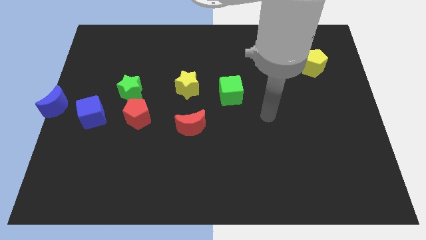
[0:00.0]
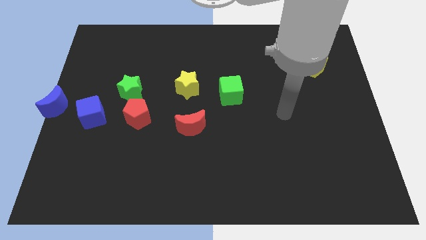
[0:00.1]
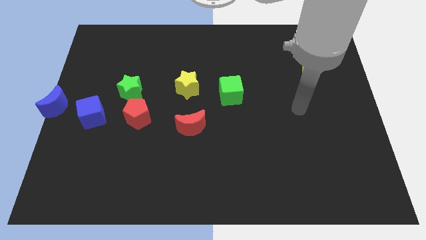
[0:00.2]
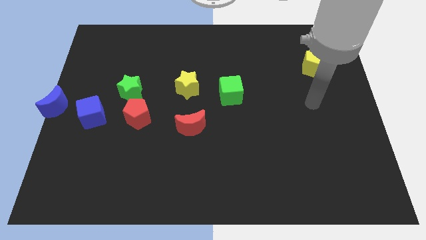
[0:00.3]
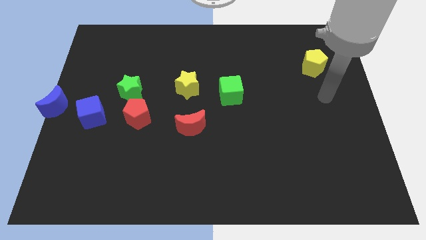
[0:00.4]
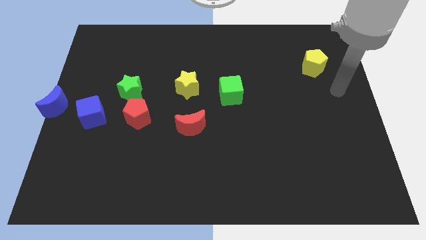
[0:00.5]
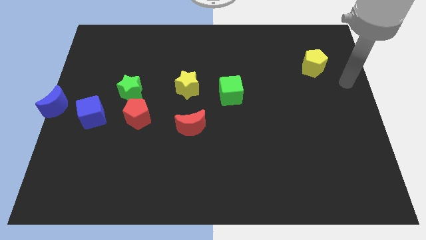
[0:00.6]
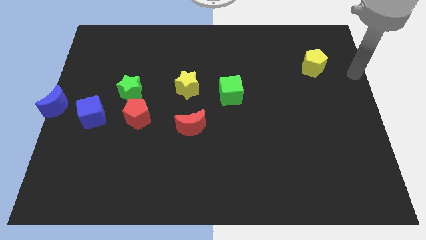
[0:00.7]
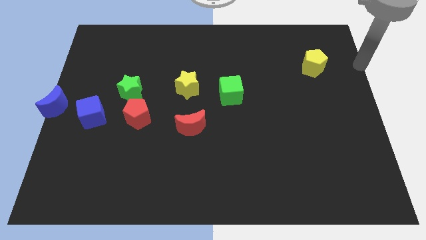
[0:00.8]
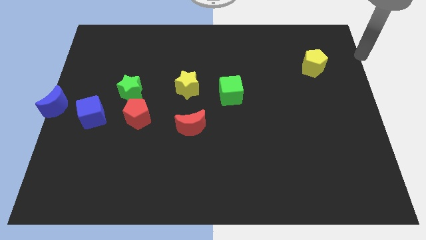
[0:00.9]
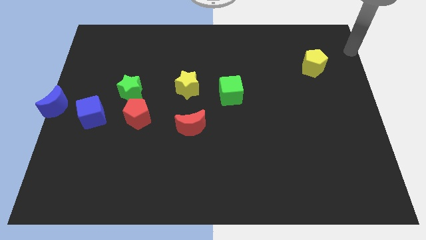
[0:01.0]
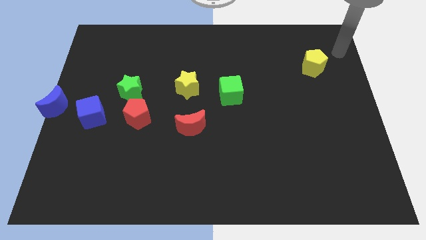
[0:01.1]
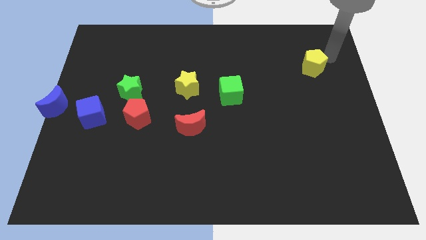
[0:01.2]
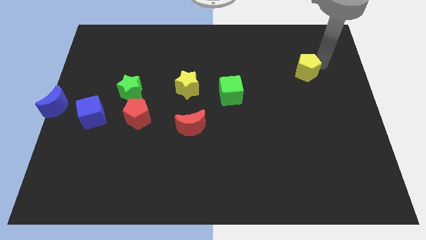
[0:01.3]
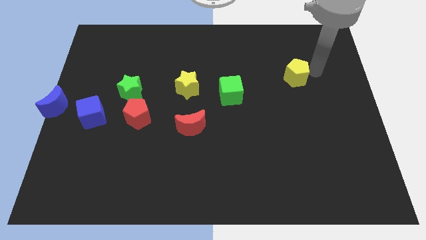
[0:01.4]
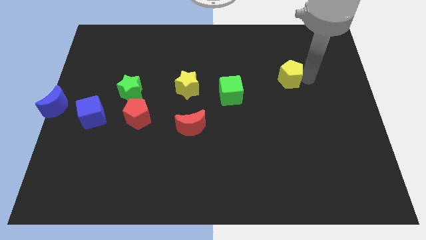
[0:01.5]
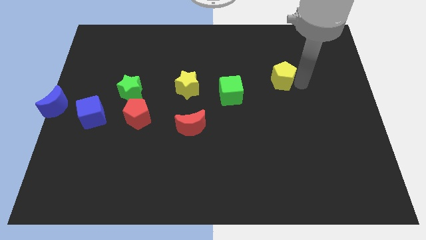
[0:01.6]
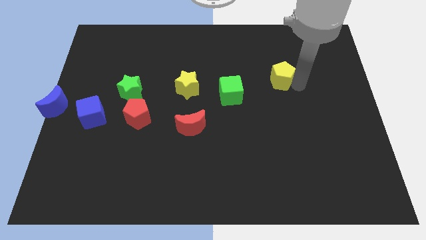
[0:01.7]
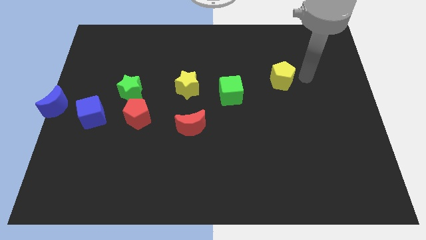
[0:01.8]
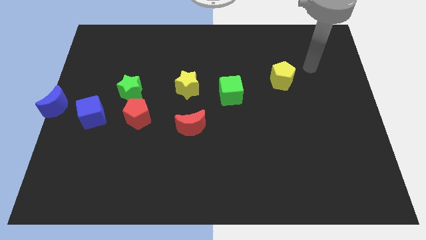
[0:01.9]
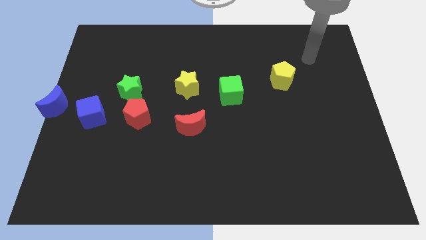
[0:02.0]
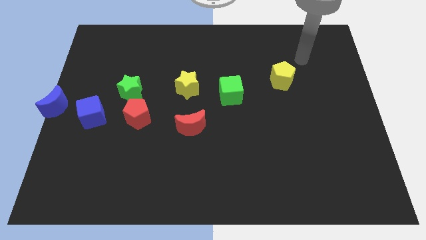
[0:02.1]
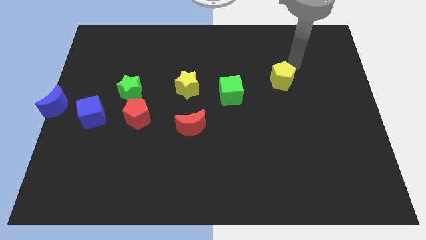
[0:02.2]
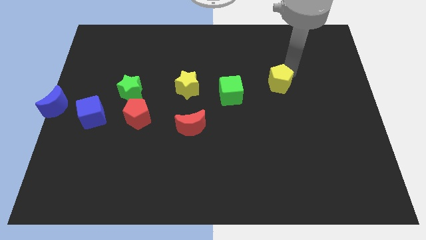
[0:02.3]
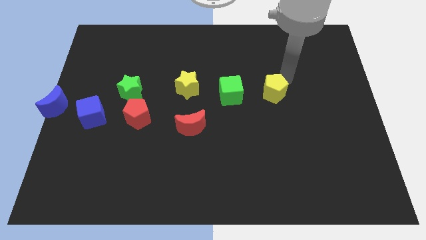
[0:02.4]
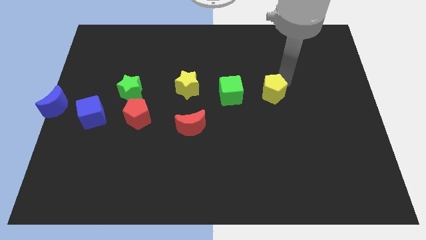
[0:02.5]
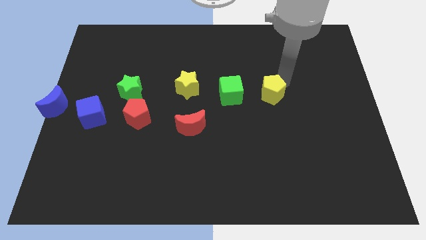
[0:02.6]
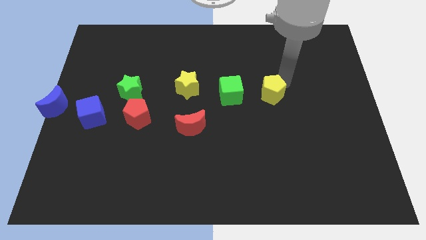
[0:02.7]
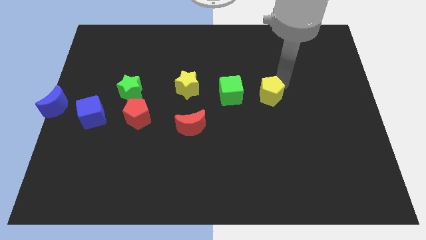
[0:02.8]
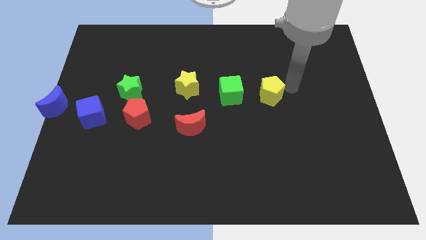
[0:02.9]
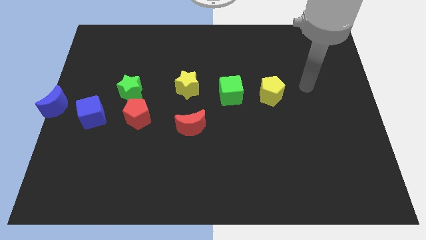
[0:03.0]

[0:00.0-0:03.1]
place the yellow pentagon at the right of the green cube

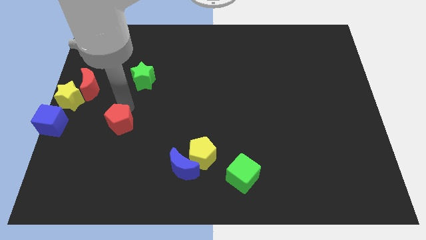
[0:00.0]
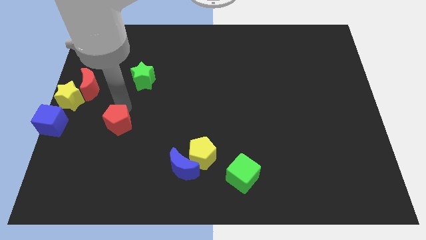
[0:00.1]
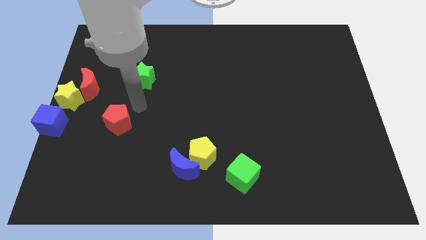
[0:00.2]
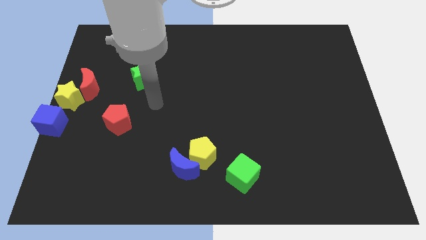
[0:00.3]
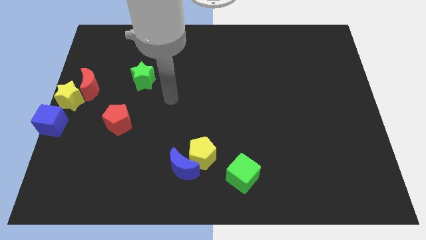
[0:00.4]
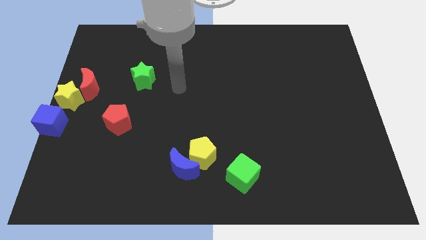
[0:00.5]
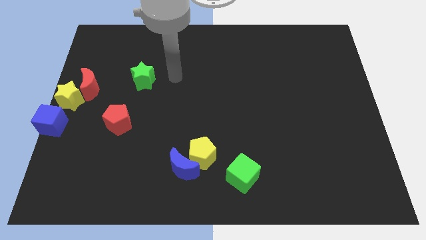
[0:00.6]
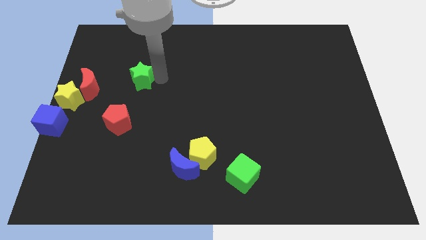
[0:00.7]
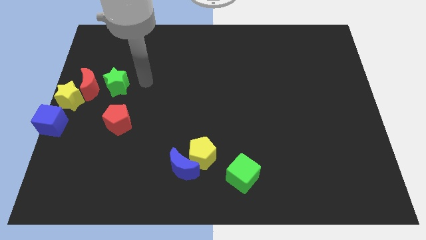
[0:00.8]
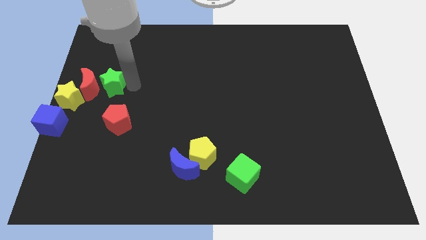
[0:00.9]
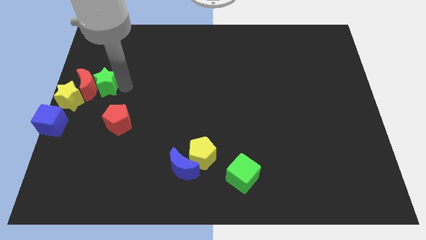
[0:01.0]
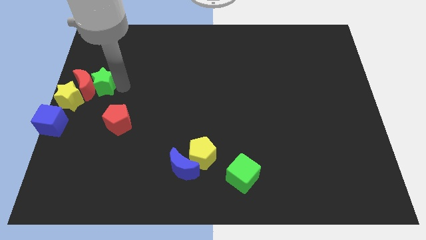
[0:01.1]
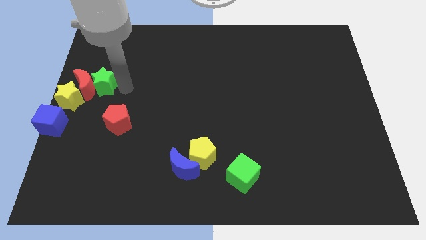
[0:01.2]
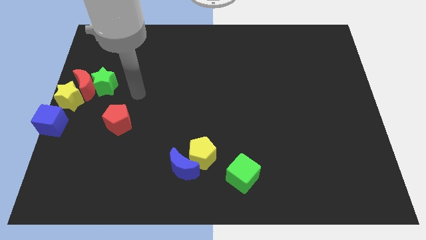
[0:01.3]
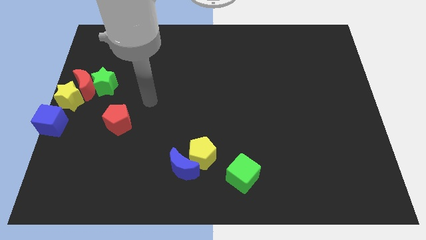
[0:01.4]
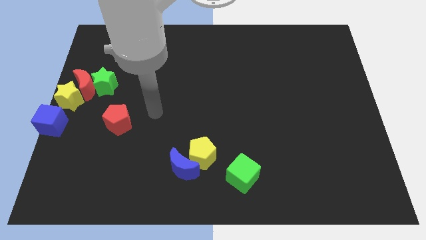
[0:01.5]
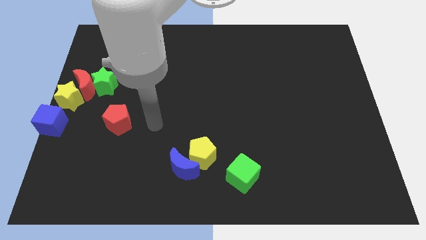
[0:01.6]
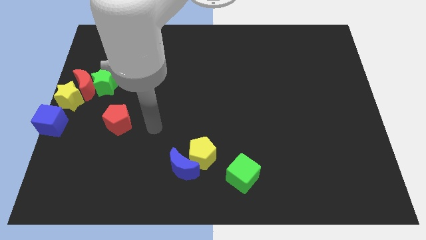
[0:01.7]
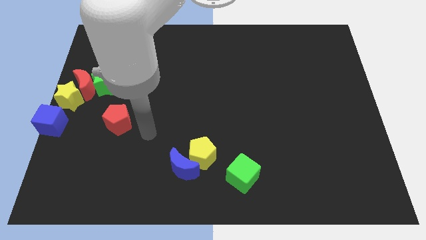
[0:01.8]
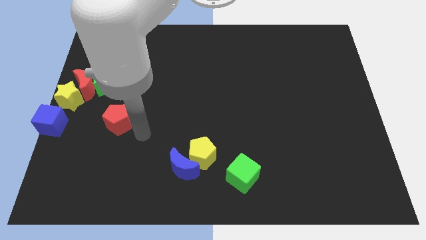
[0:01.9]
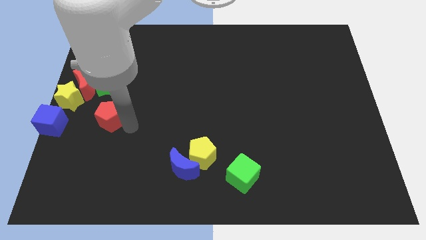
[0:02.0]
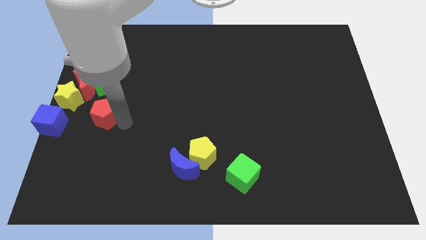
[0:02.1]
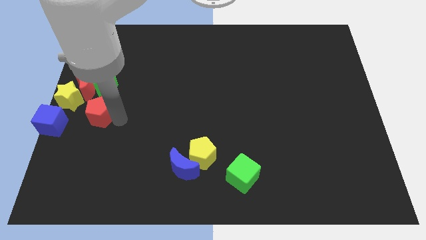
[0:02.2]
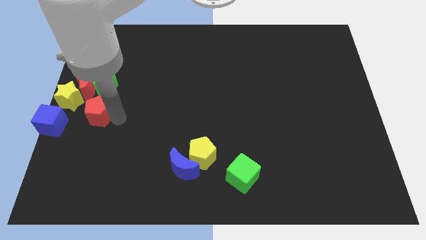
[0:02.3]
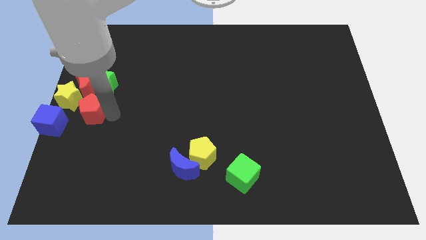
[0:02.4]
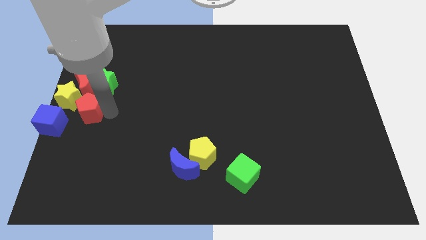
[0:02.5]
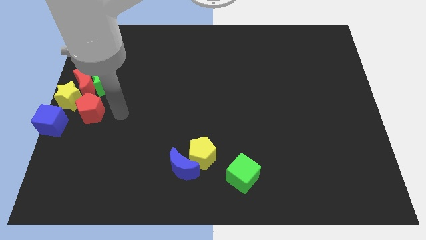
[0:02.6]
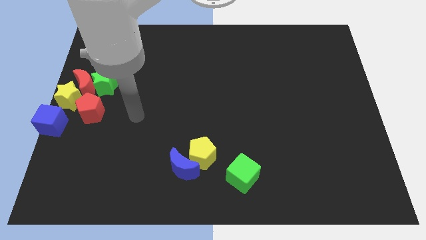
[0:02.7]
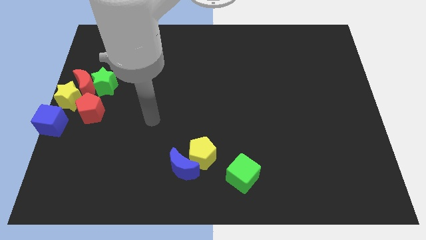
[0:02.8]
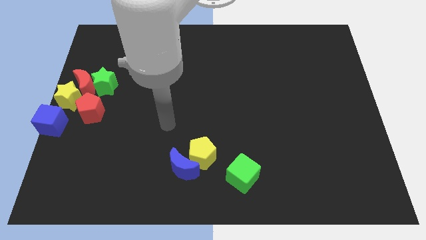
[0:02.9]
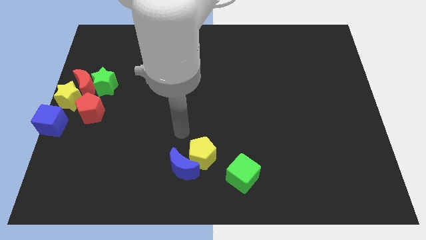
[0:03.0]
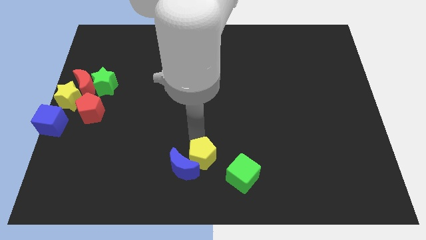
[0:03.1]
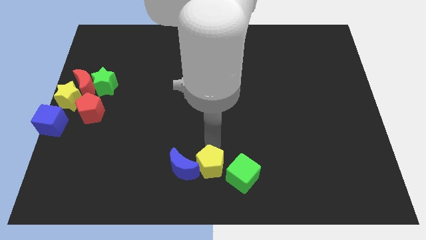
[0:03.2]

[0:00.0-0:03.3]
put the green star and red pentagon close to the red crescent

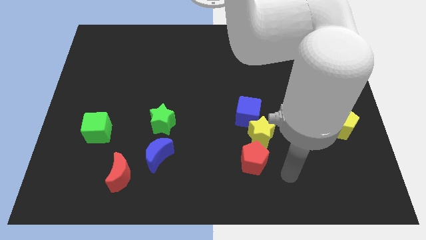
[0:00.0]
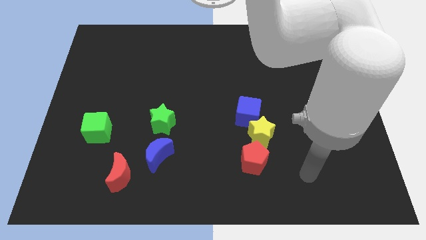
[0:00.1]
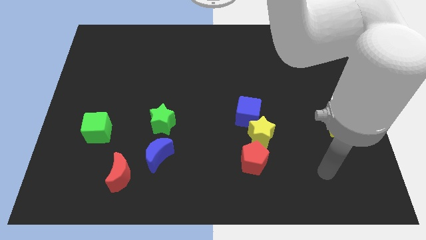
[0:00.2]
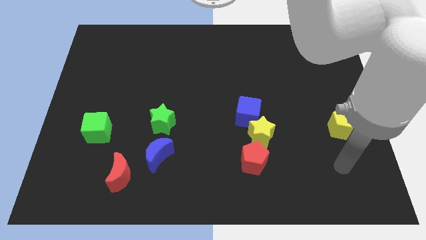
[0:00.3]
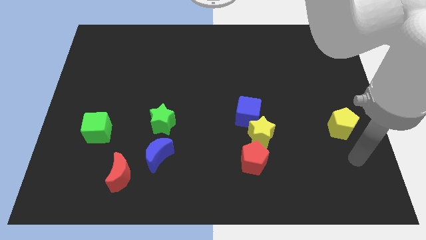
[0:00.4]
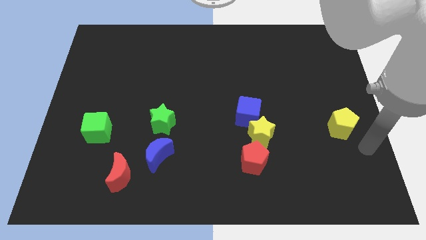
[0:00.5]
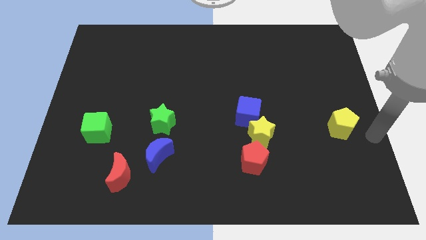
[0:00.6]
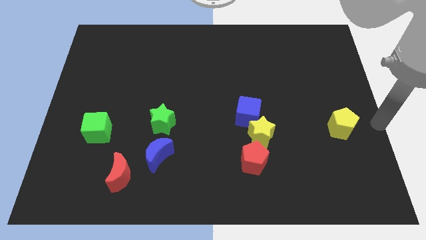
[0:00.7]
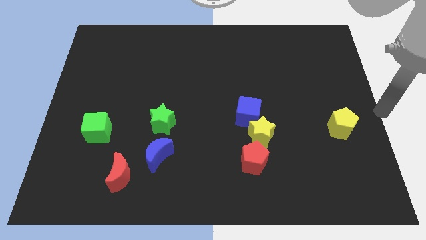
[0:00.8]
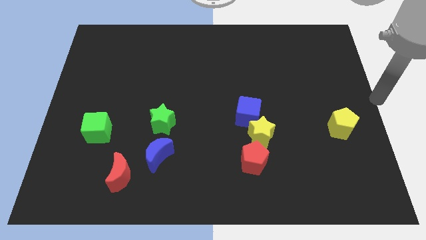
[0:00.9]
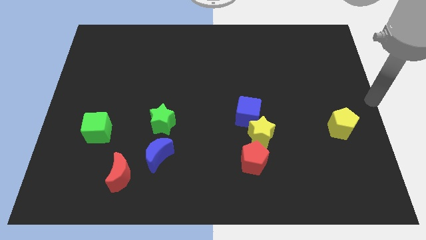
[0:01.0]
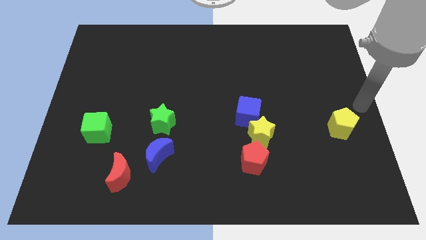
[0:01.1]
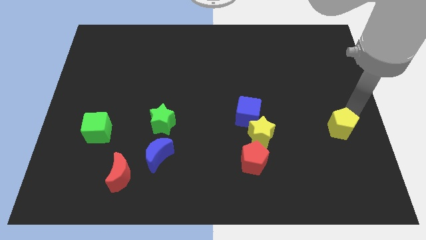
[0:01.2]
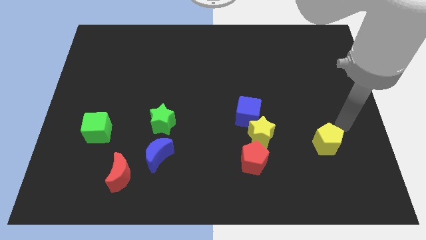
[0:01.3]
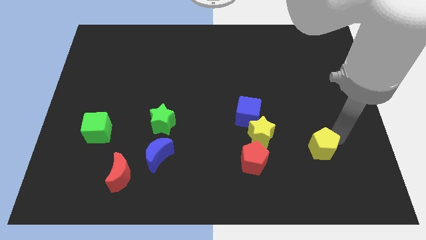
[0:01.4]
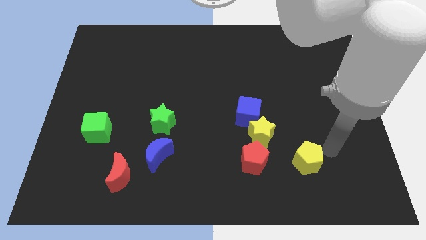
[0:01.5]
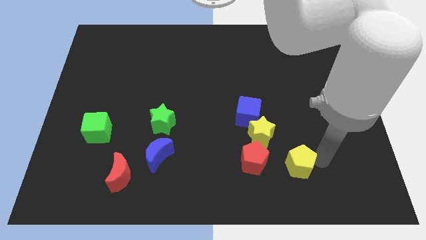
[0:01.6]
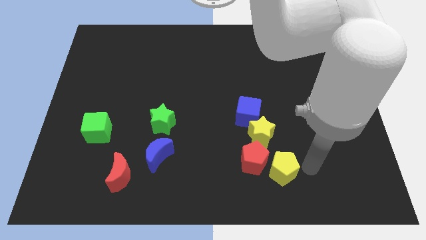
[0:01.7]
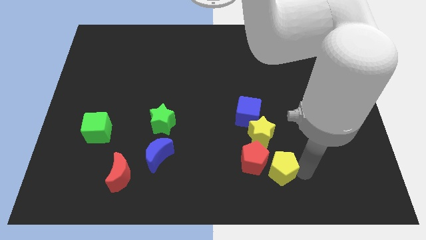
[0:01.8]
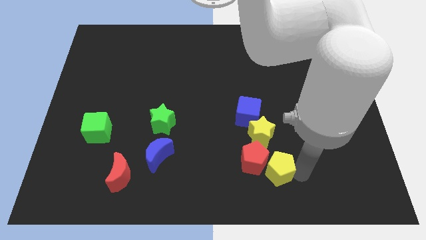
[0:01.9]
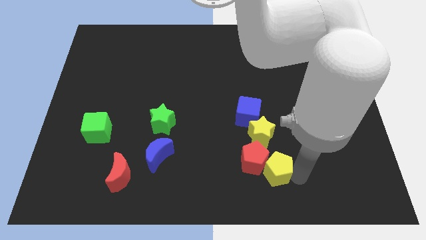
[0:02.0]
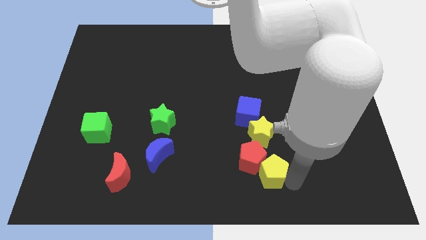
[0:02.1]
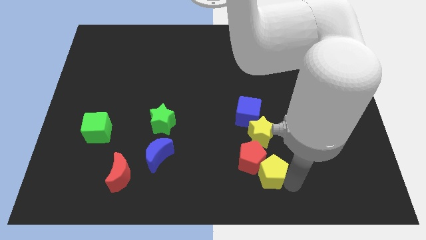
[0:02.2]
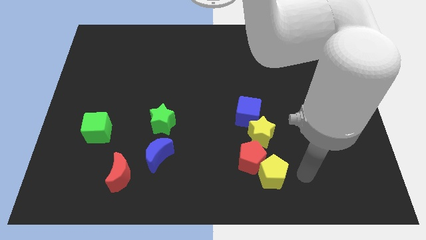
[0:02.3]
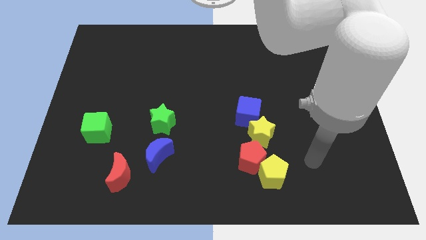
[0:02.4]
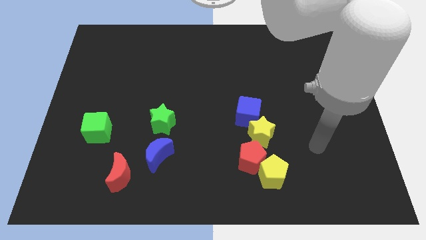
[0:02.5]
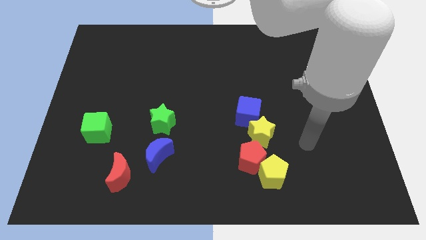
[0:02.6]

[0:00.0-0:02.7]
move the yellow pentagon into the red pentagon

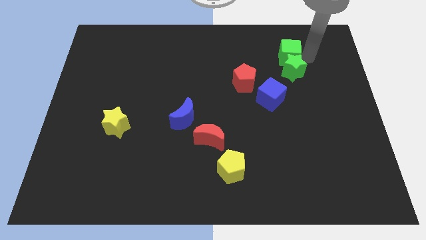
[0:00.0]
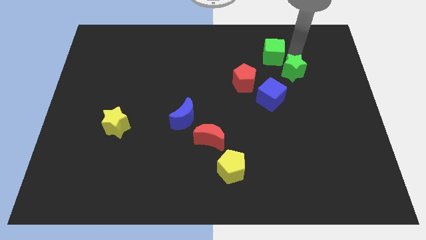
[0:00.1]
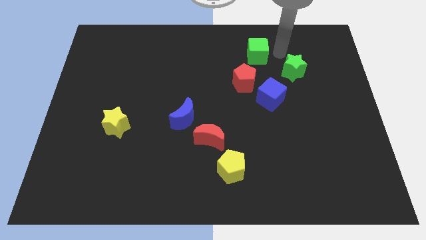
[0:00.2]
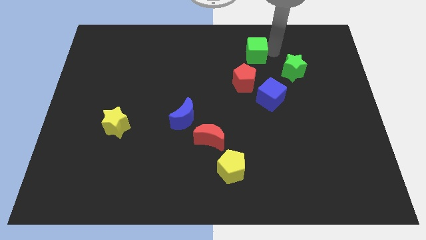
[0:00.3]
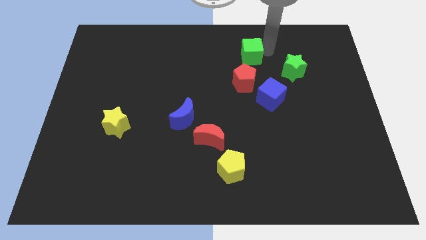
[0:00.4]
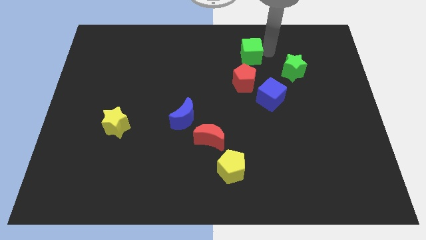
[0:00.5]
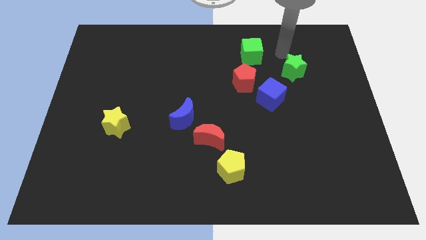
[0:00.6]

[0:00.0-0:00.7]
move the green cube above the red pentagon
